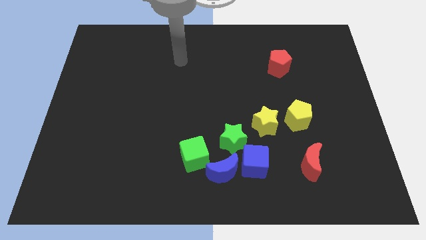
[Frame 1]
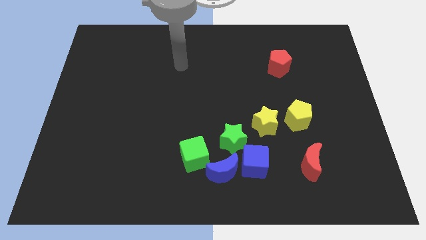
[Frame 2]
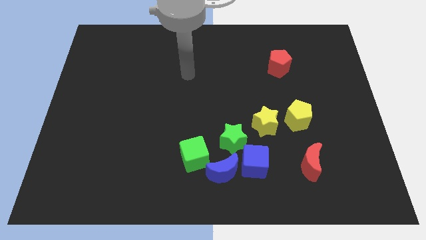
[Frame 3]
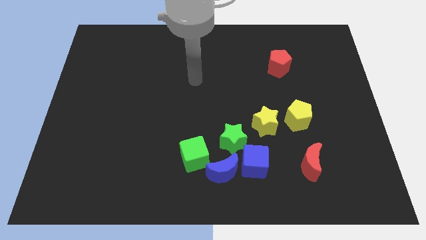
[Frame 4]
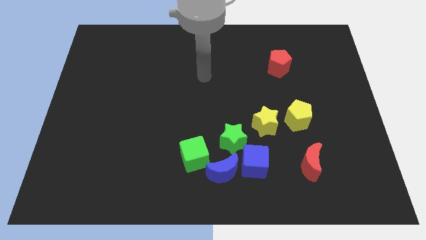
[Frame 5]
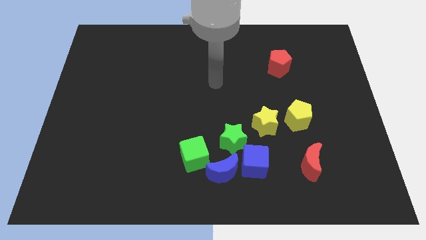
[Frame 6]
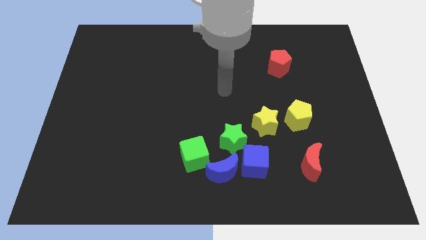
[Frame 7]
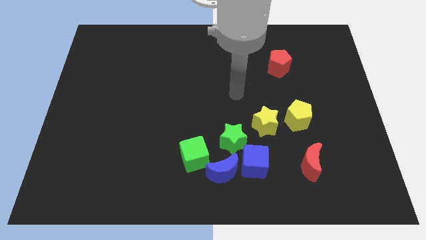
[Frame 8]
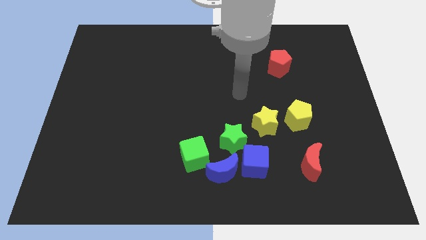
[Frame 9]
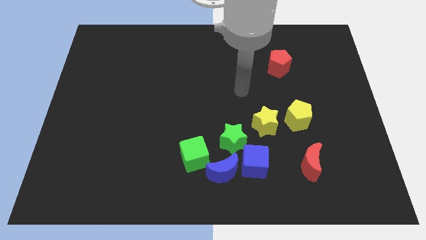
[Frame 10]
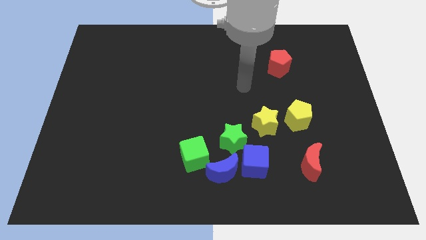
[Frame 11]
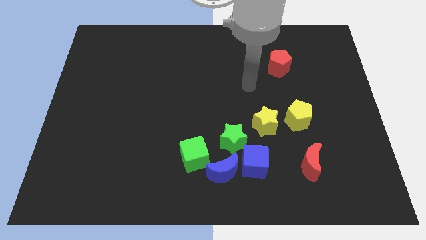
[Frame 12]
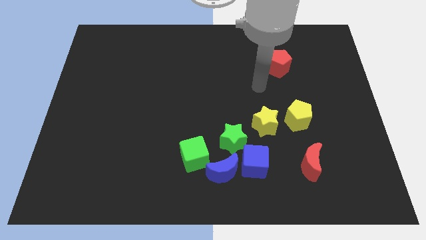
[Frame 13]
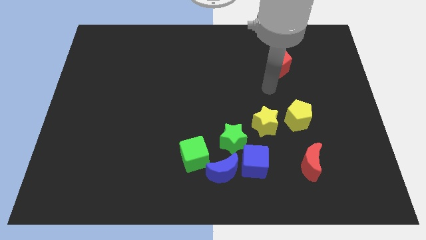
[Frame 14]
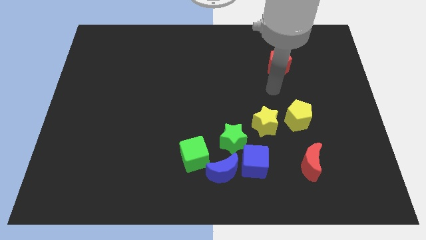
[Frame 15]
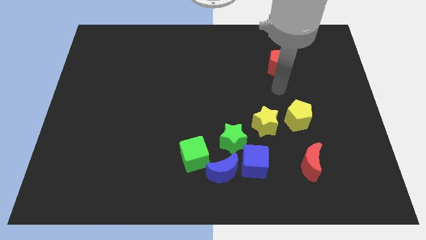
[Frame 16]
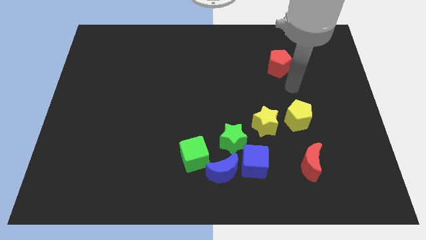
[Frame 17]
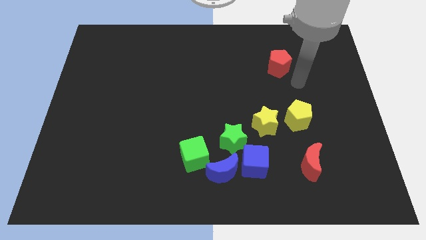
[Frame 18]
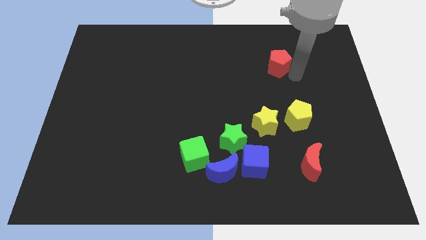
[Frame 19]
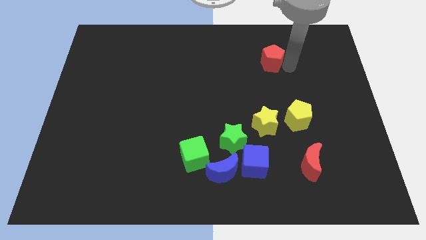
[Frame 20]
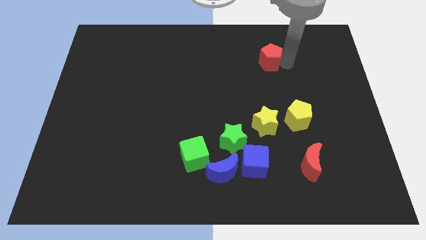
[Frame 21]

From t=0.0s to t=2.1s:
move your arm close to the red pentagon

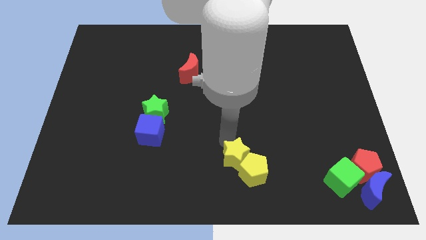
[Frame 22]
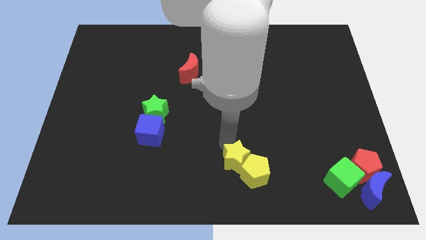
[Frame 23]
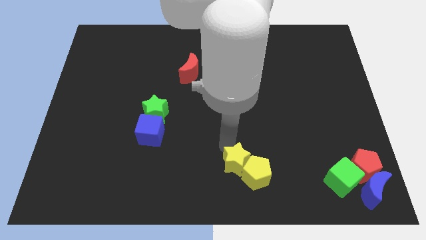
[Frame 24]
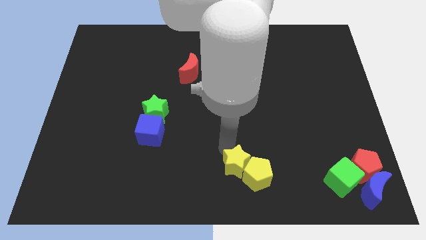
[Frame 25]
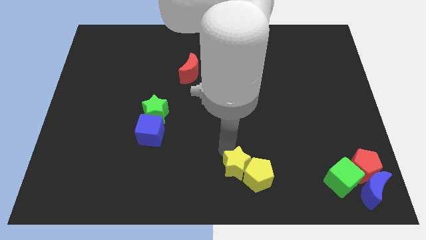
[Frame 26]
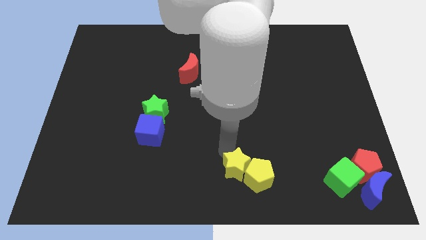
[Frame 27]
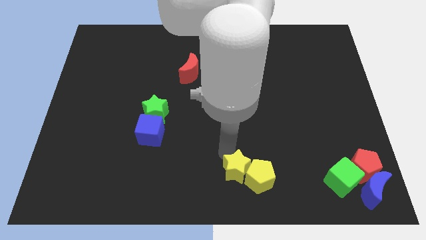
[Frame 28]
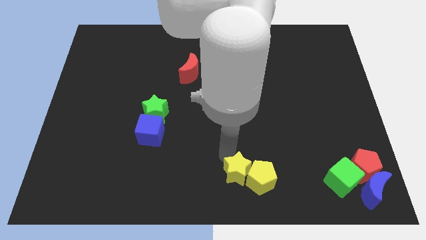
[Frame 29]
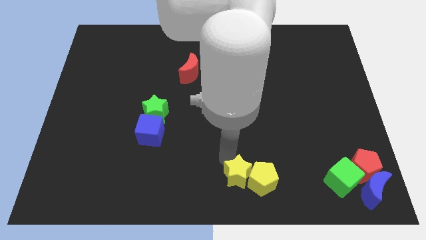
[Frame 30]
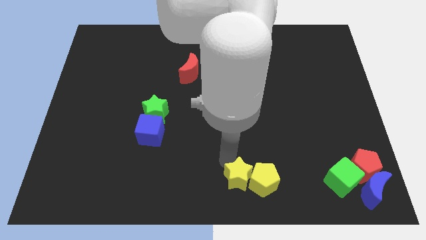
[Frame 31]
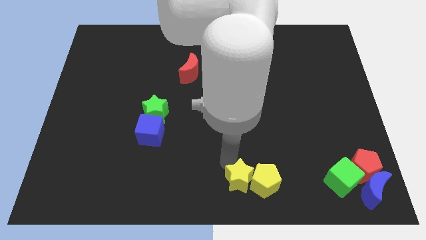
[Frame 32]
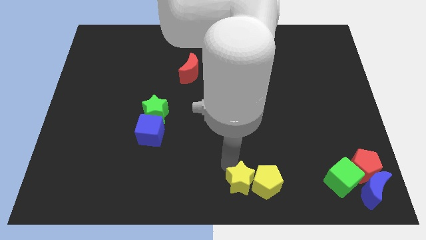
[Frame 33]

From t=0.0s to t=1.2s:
move yellow blocks to the bottom center of the board

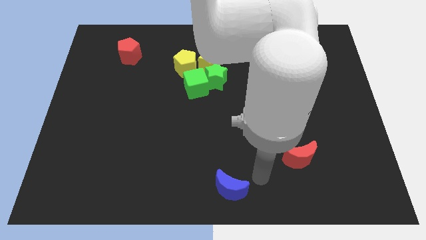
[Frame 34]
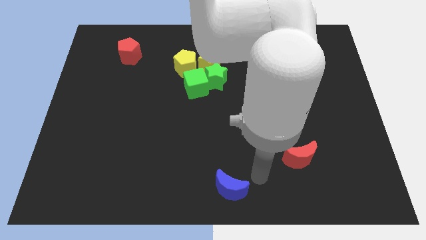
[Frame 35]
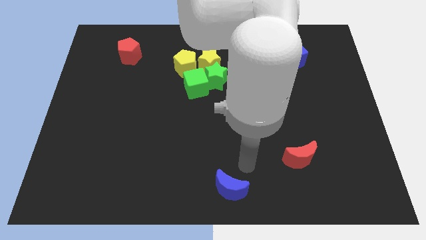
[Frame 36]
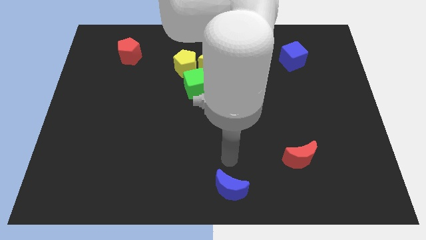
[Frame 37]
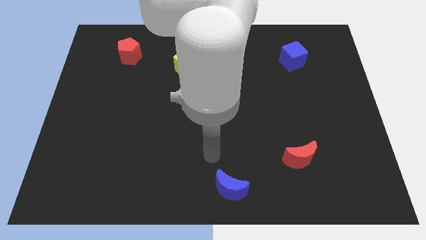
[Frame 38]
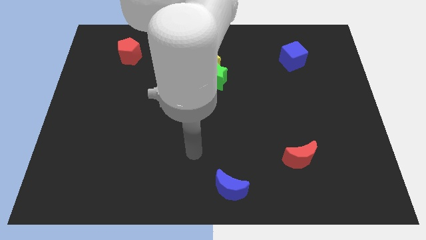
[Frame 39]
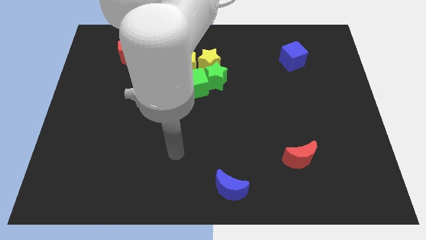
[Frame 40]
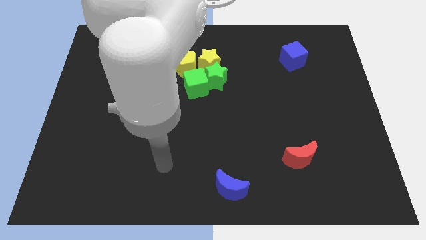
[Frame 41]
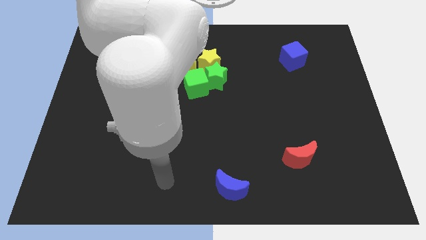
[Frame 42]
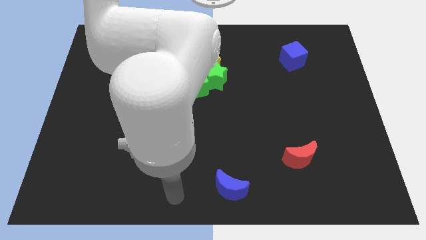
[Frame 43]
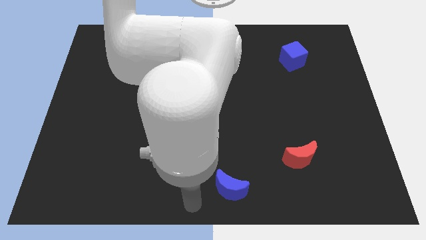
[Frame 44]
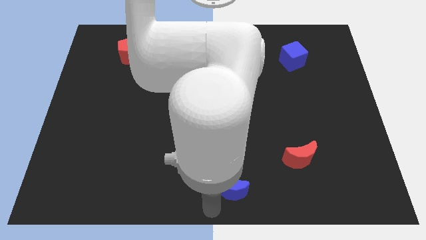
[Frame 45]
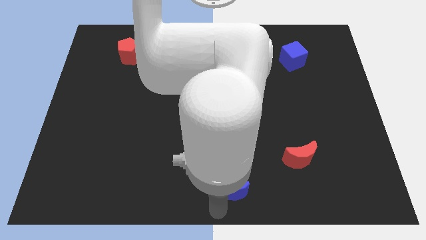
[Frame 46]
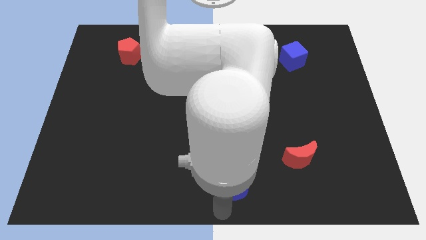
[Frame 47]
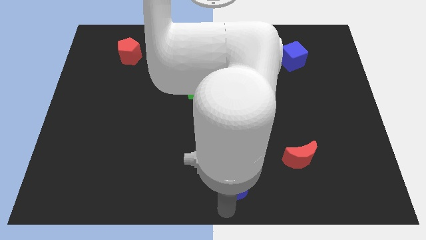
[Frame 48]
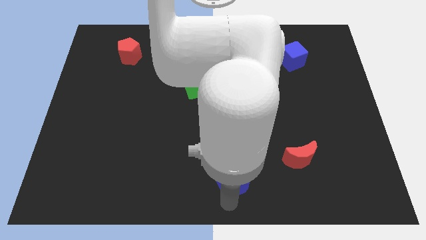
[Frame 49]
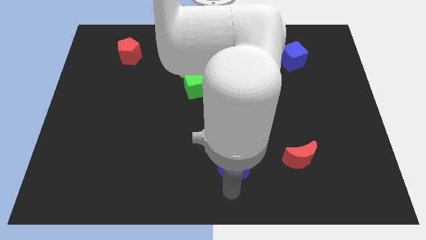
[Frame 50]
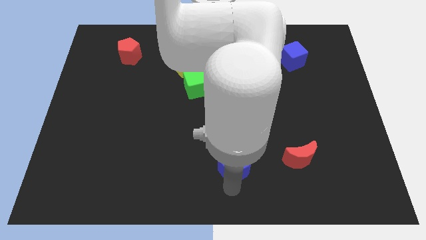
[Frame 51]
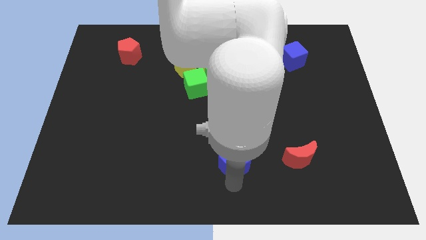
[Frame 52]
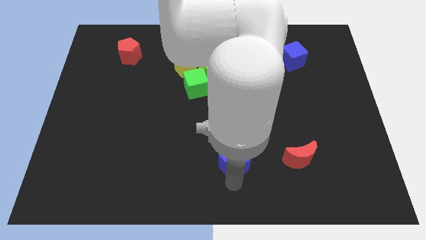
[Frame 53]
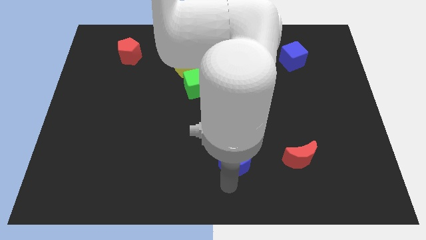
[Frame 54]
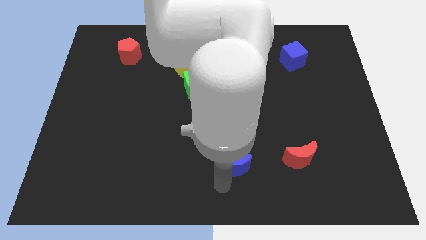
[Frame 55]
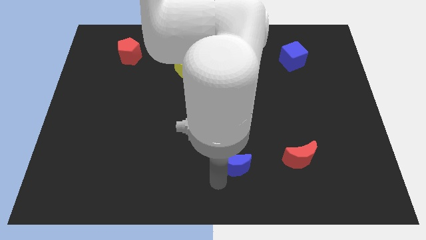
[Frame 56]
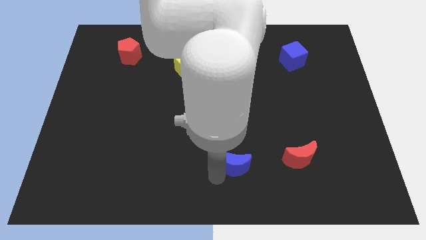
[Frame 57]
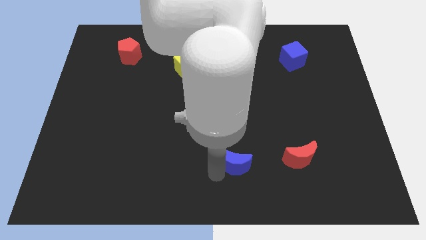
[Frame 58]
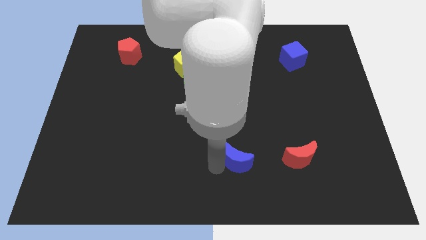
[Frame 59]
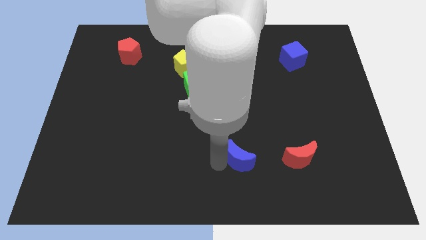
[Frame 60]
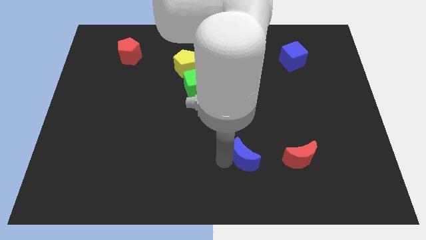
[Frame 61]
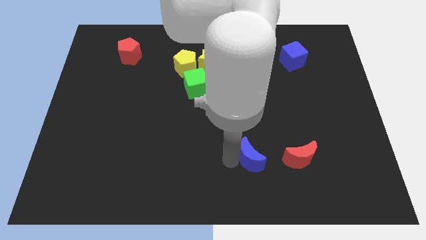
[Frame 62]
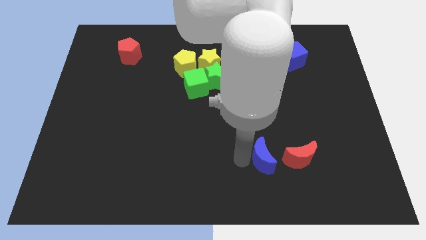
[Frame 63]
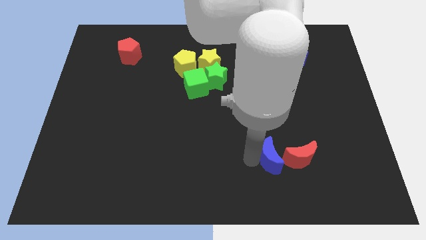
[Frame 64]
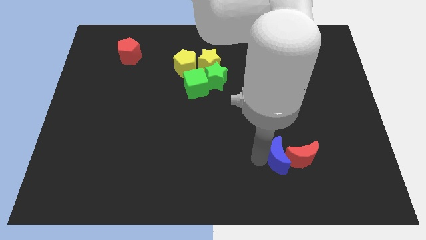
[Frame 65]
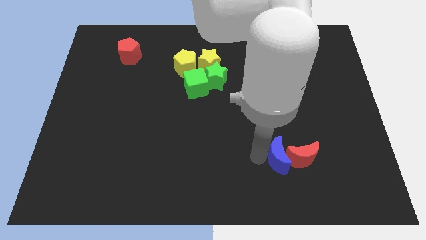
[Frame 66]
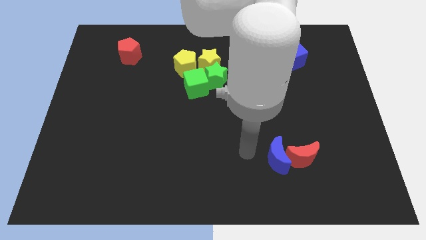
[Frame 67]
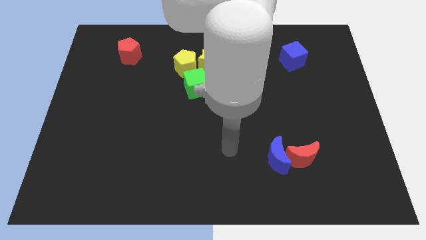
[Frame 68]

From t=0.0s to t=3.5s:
move the blue crescent into the left side of the red crescent

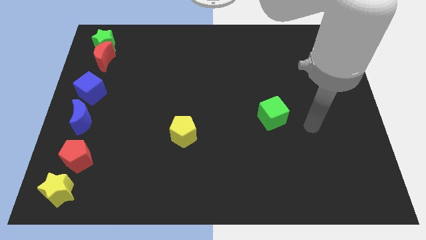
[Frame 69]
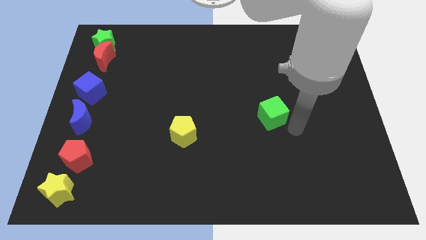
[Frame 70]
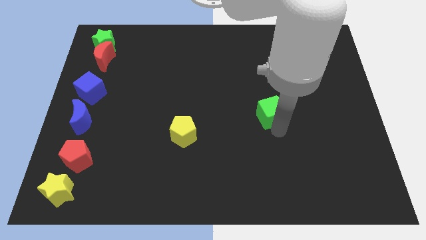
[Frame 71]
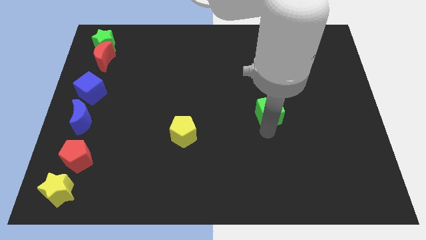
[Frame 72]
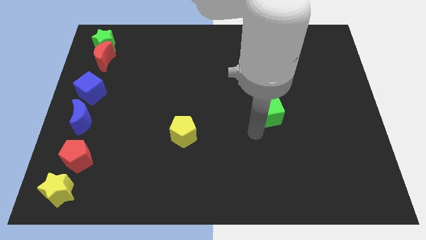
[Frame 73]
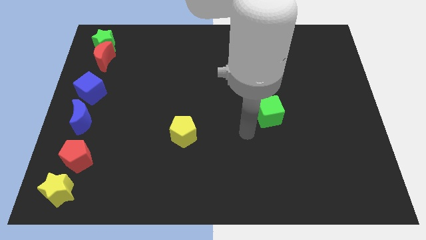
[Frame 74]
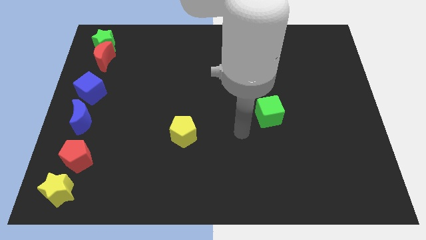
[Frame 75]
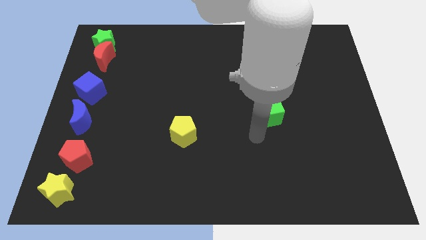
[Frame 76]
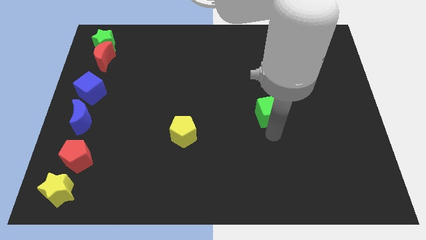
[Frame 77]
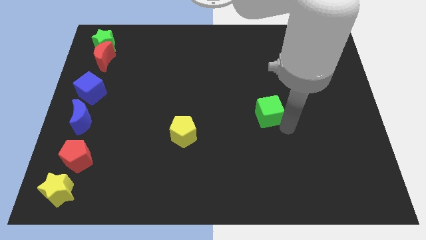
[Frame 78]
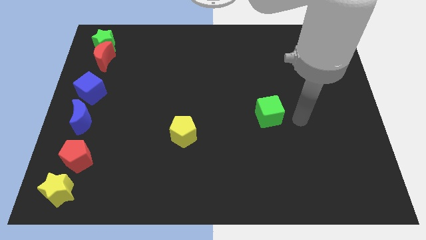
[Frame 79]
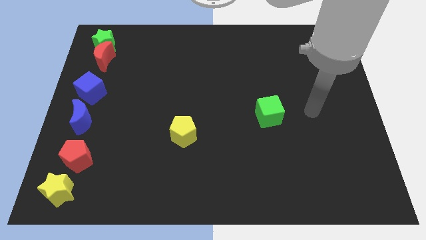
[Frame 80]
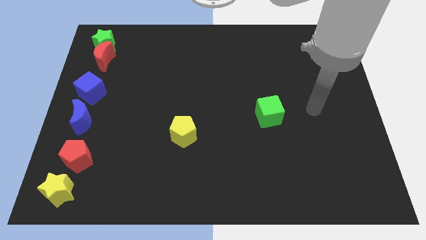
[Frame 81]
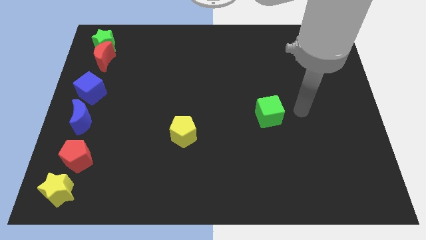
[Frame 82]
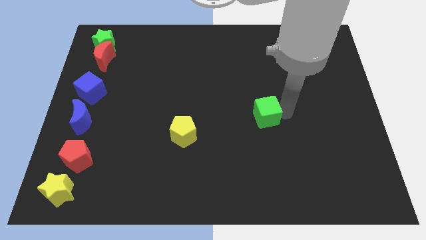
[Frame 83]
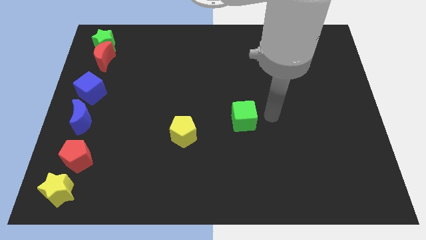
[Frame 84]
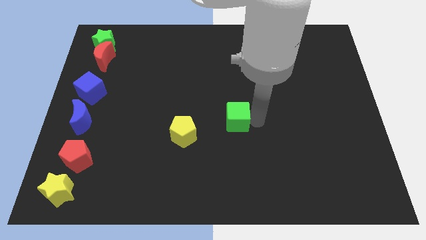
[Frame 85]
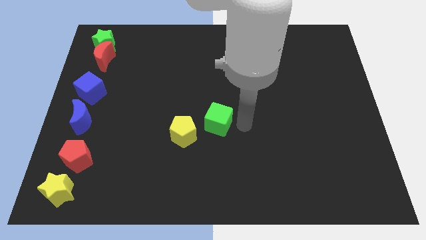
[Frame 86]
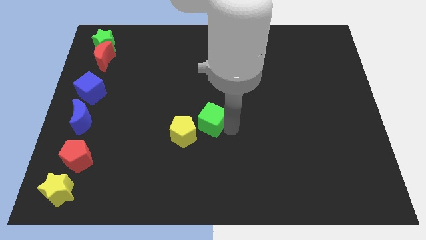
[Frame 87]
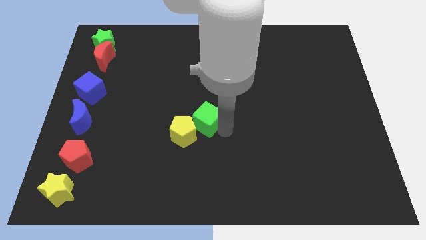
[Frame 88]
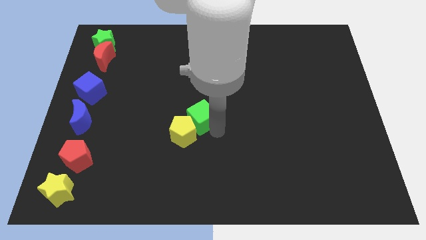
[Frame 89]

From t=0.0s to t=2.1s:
push the green cube into the yellow pentagon
